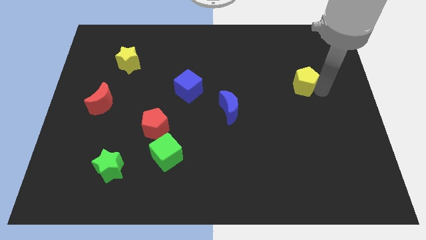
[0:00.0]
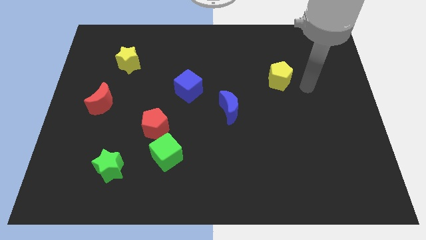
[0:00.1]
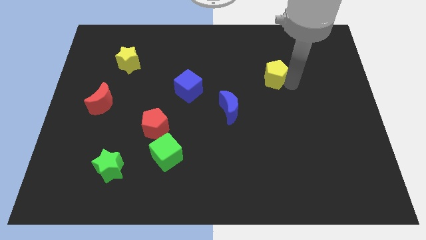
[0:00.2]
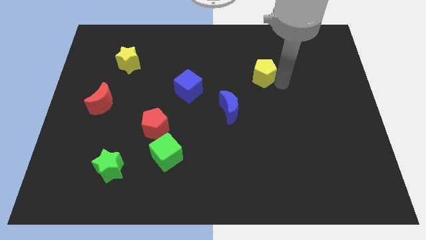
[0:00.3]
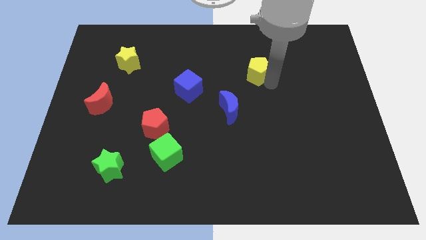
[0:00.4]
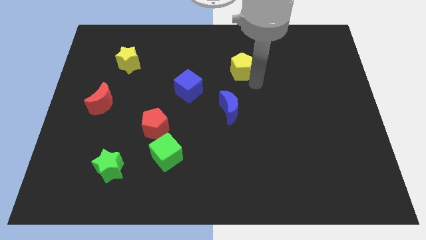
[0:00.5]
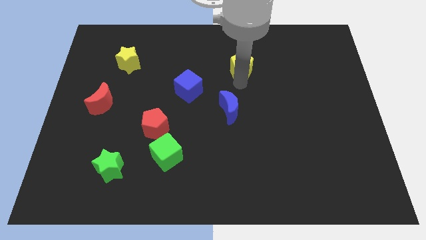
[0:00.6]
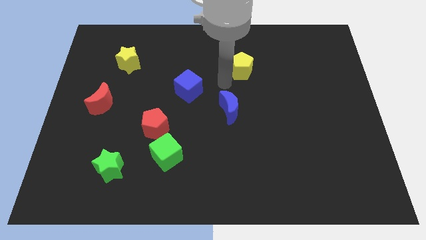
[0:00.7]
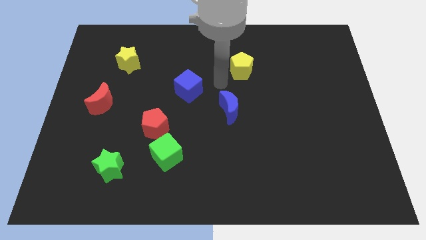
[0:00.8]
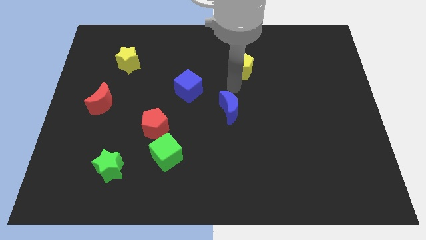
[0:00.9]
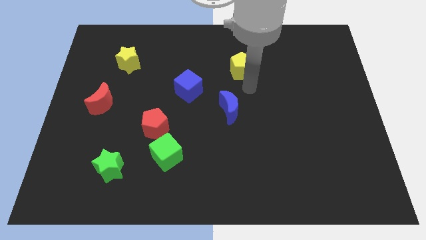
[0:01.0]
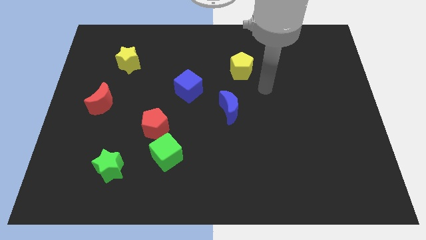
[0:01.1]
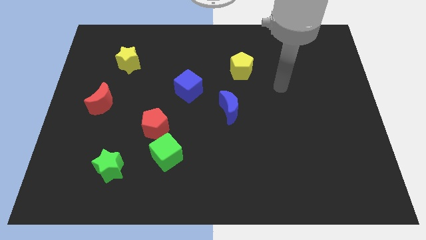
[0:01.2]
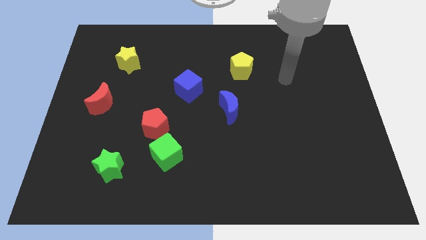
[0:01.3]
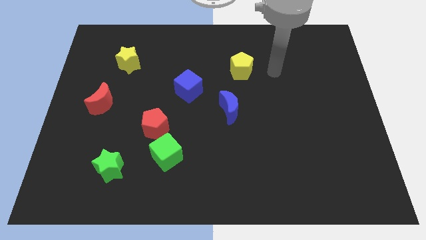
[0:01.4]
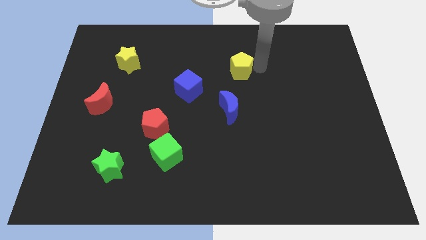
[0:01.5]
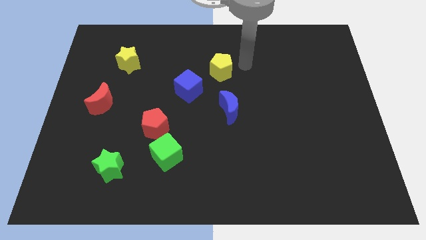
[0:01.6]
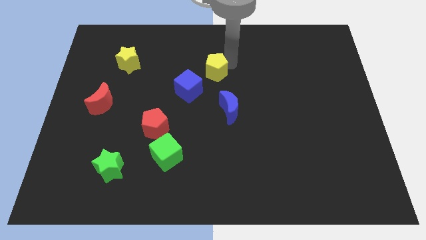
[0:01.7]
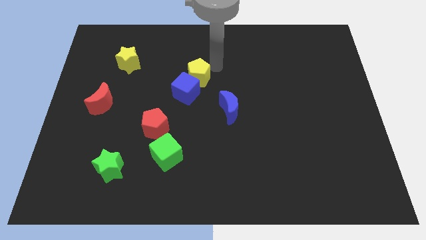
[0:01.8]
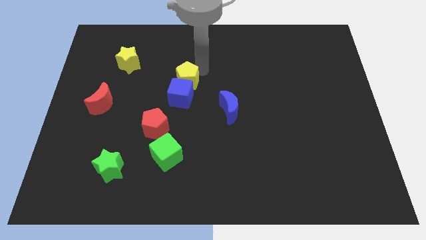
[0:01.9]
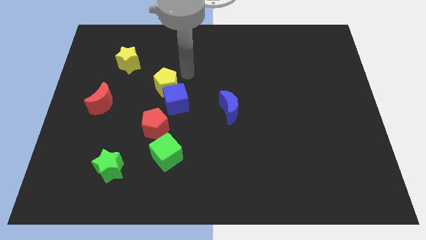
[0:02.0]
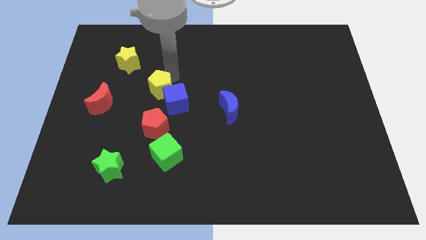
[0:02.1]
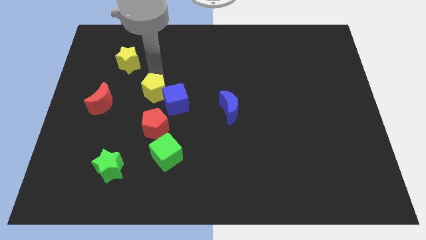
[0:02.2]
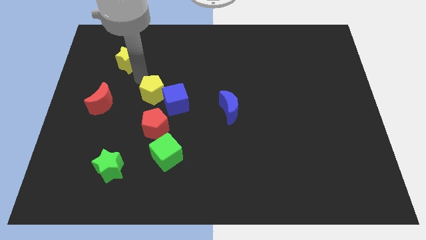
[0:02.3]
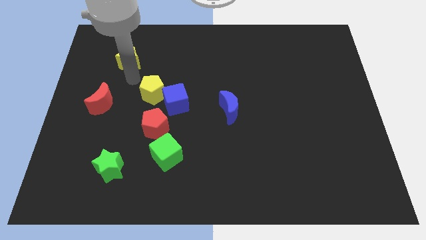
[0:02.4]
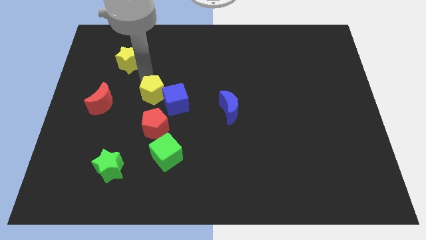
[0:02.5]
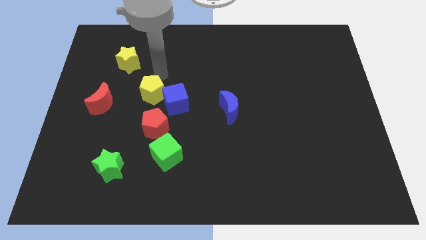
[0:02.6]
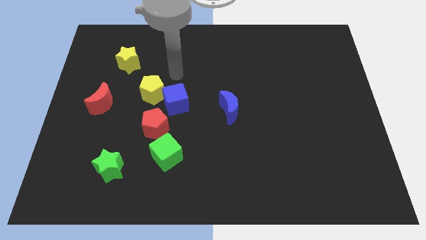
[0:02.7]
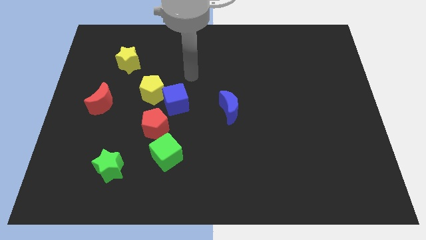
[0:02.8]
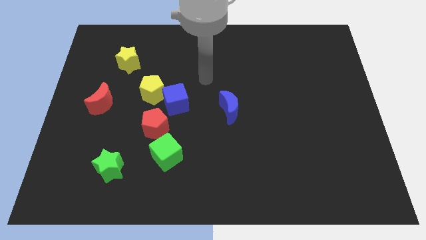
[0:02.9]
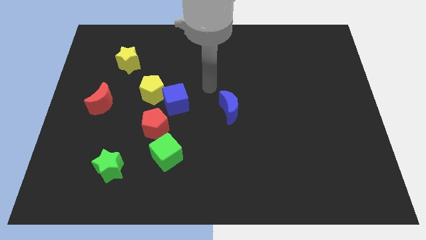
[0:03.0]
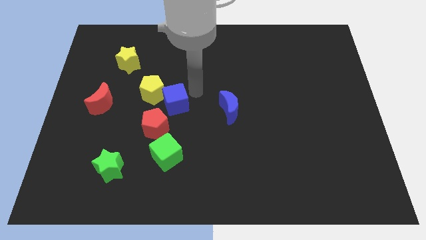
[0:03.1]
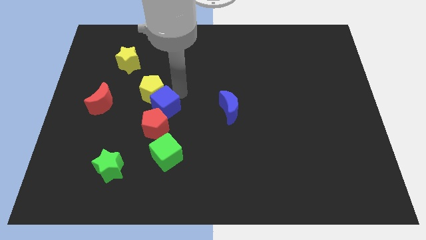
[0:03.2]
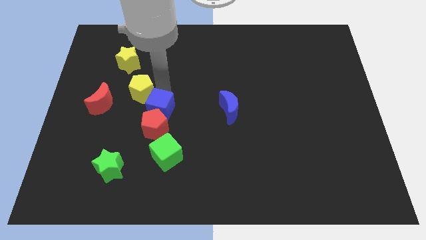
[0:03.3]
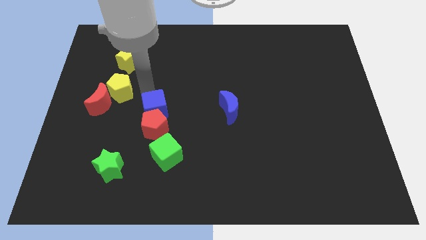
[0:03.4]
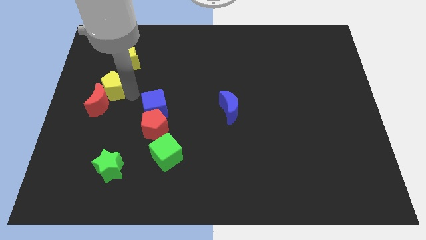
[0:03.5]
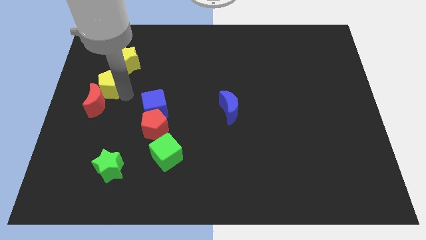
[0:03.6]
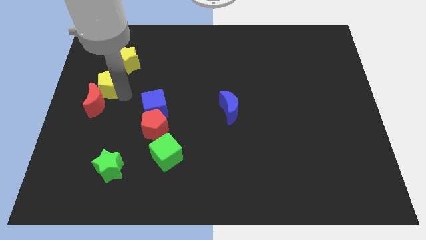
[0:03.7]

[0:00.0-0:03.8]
slide the yellow pentagon into the red moon

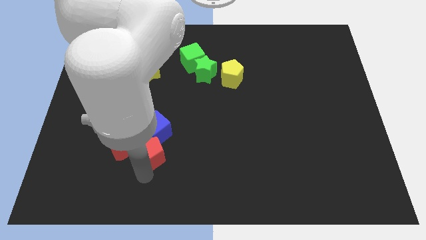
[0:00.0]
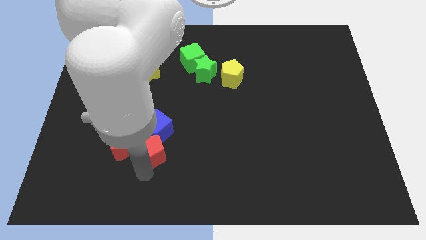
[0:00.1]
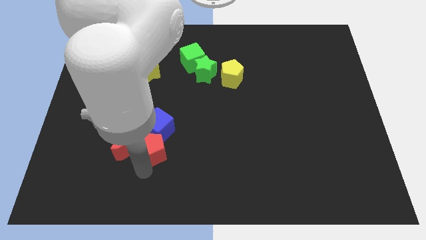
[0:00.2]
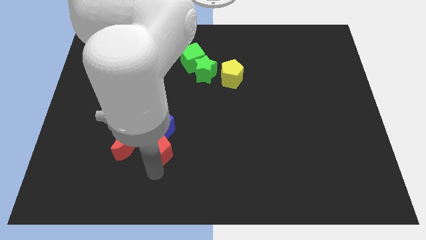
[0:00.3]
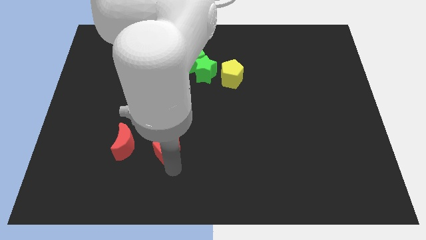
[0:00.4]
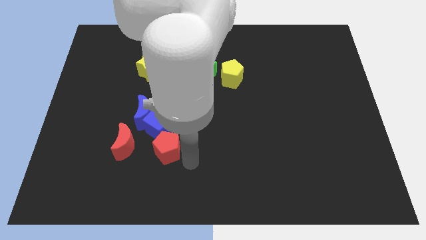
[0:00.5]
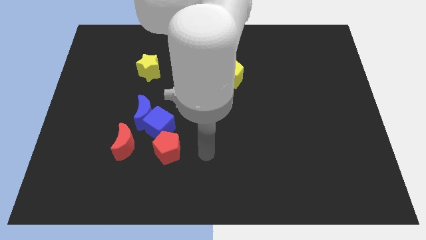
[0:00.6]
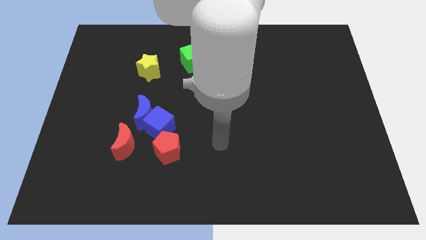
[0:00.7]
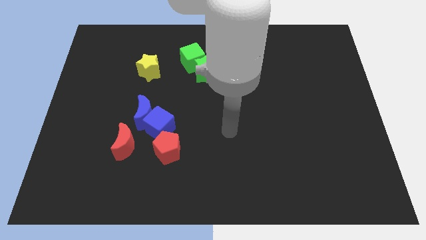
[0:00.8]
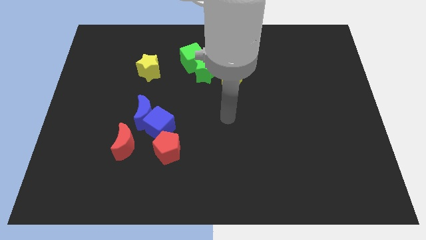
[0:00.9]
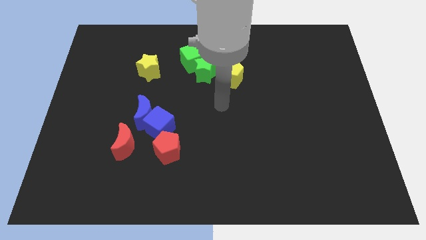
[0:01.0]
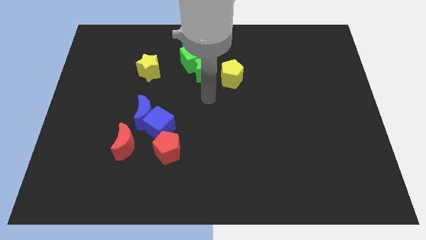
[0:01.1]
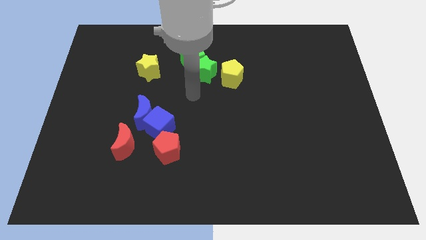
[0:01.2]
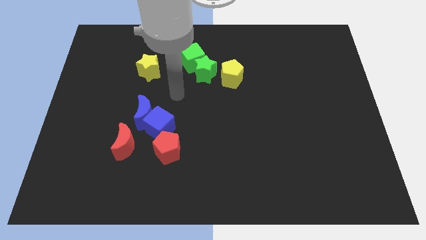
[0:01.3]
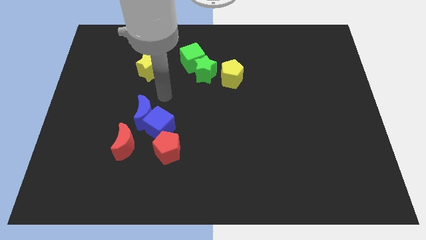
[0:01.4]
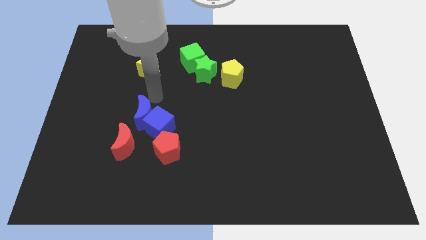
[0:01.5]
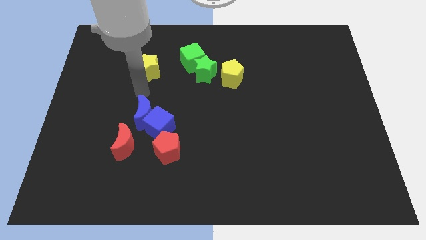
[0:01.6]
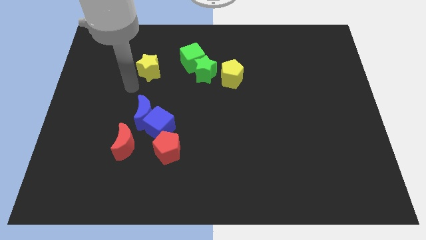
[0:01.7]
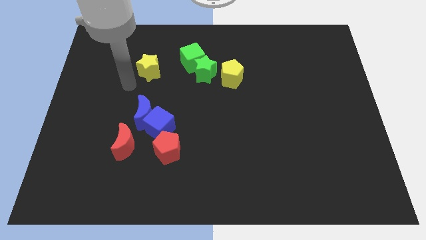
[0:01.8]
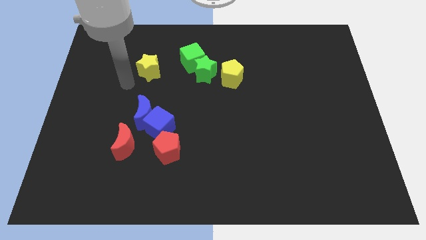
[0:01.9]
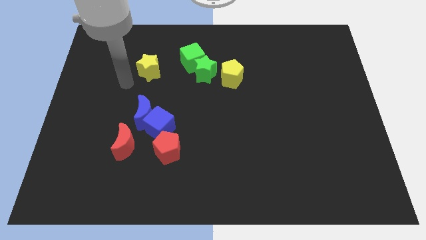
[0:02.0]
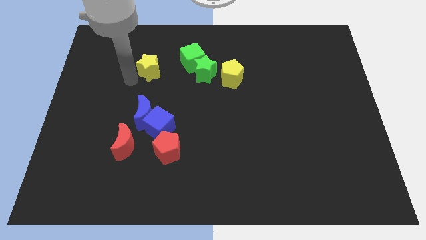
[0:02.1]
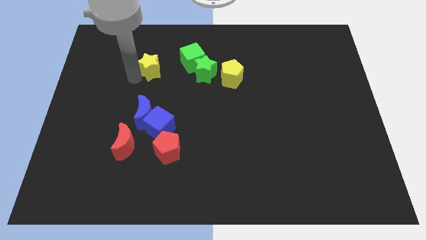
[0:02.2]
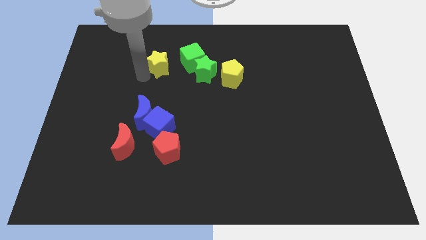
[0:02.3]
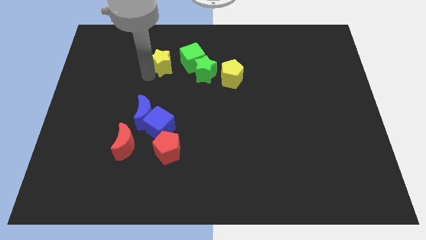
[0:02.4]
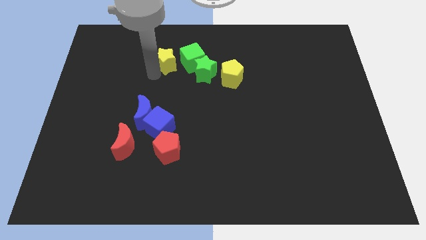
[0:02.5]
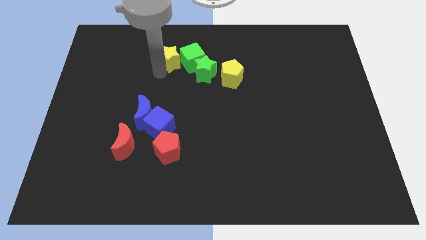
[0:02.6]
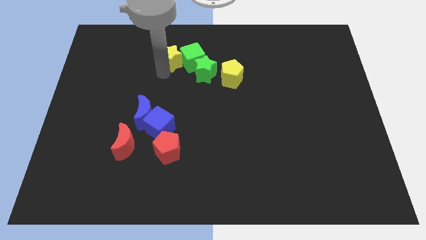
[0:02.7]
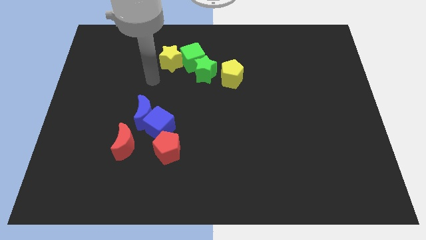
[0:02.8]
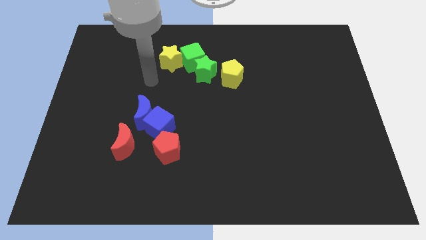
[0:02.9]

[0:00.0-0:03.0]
place the yellow star to the left of green cube

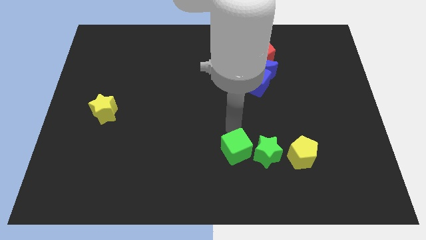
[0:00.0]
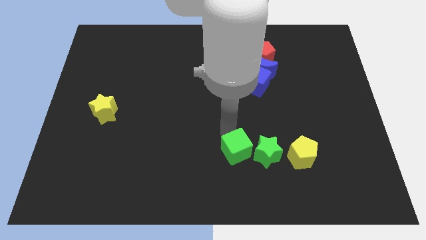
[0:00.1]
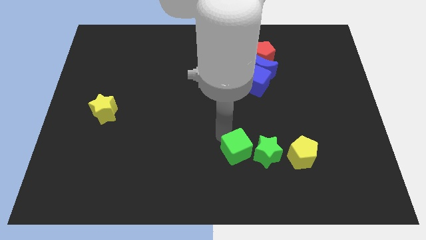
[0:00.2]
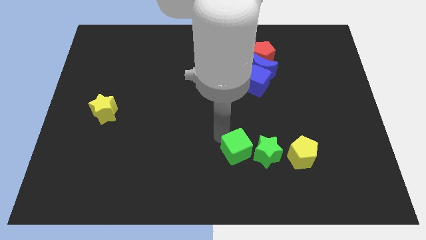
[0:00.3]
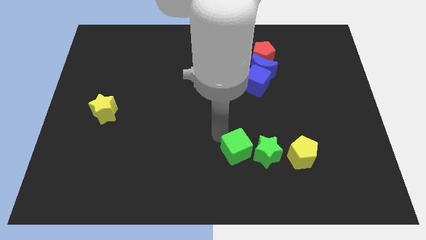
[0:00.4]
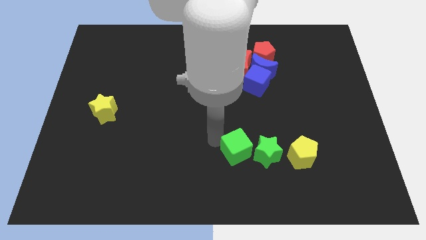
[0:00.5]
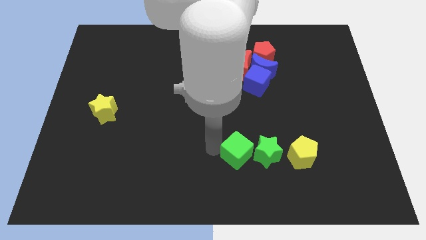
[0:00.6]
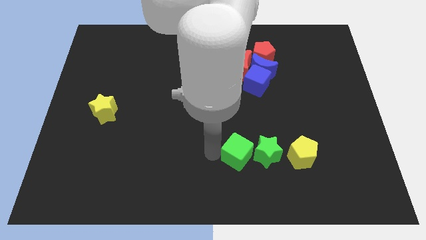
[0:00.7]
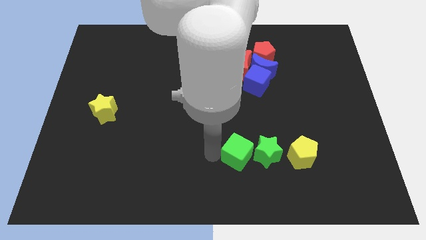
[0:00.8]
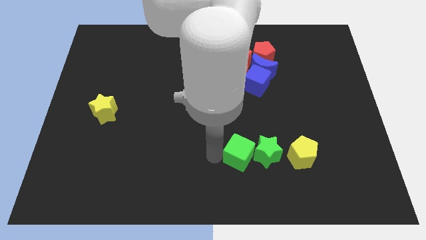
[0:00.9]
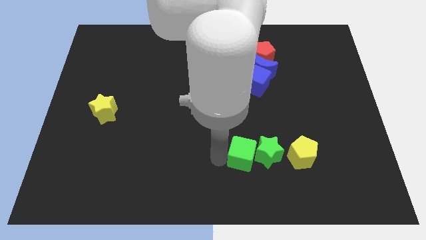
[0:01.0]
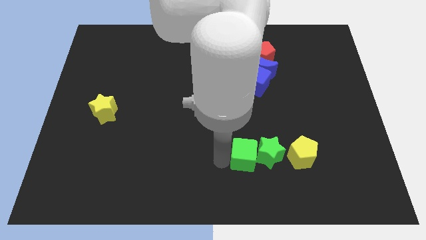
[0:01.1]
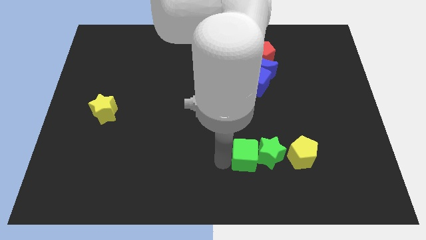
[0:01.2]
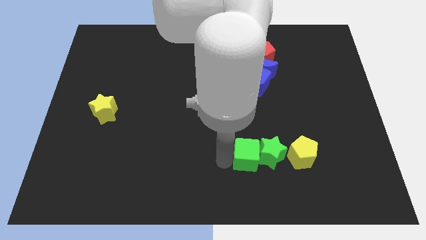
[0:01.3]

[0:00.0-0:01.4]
push the green cube close to the green star

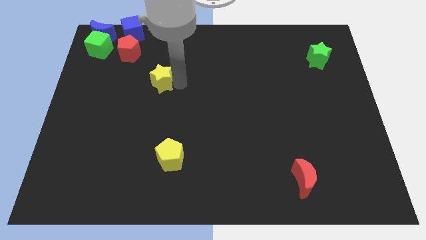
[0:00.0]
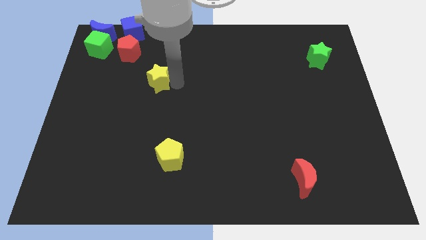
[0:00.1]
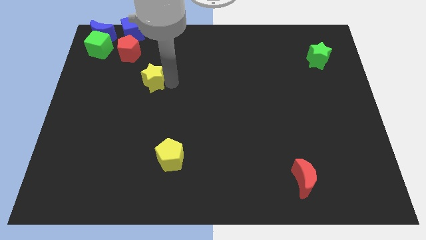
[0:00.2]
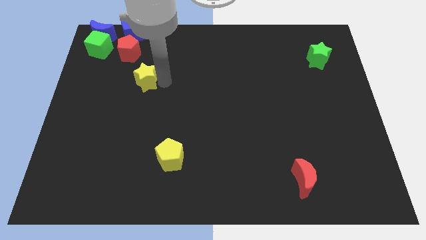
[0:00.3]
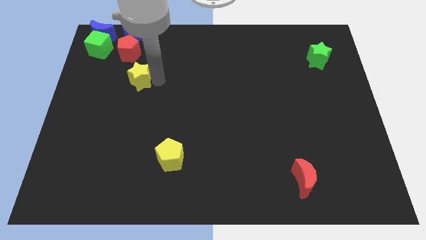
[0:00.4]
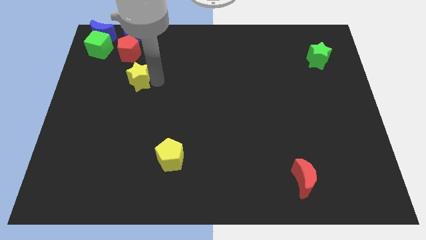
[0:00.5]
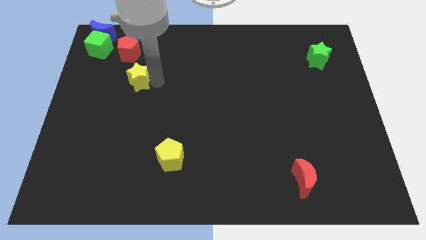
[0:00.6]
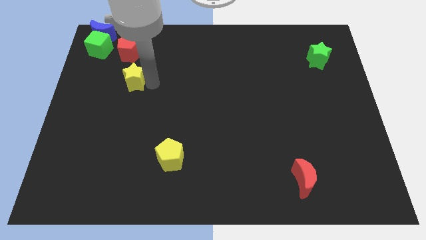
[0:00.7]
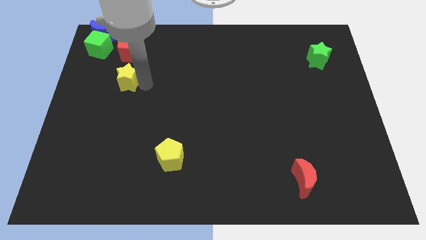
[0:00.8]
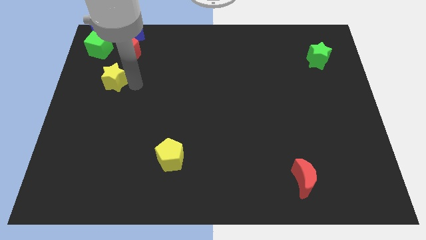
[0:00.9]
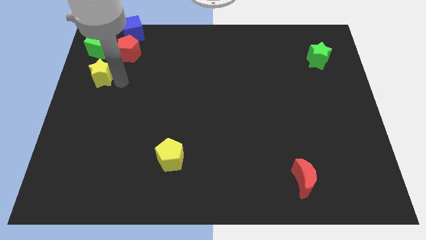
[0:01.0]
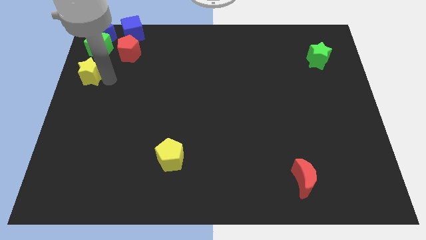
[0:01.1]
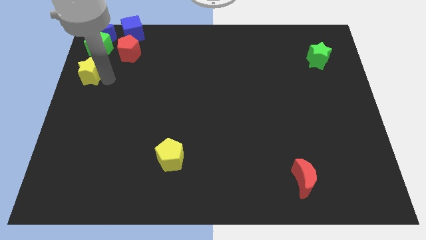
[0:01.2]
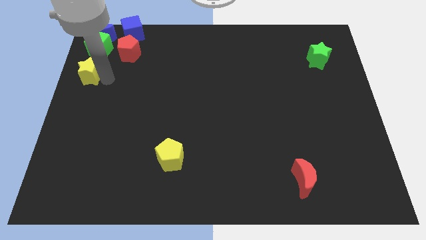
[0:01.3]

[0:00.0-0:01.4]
move yellow star to the left side of the board
